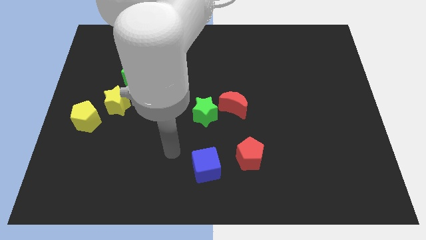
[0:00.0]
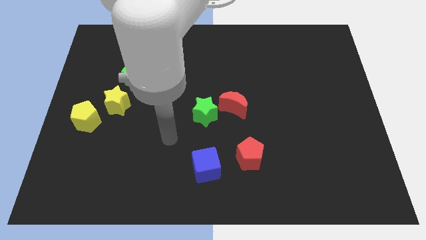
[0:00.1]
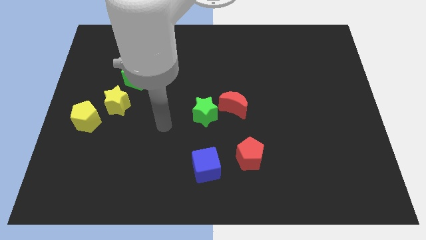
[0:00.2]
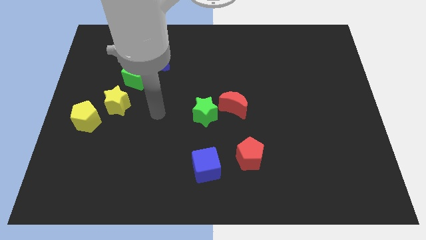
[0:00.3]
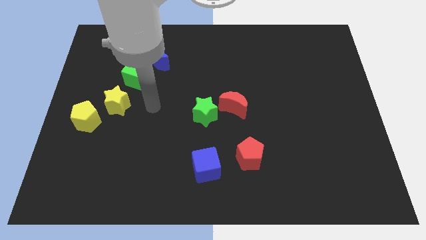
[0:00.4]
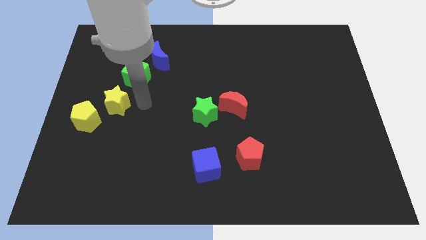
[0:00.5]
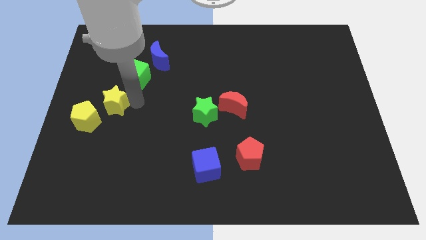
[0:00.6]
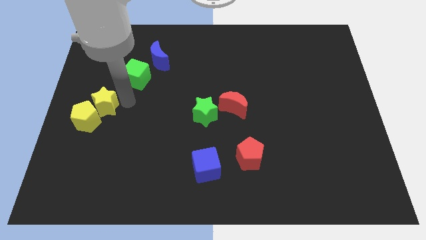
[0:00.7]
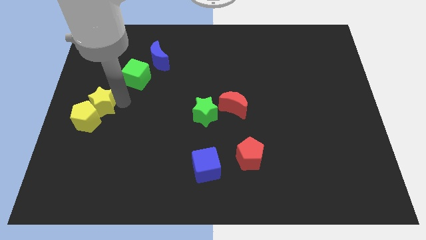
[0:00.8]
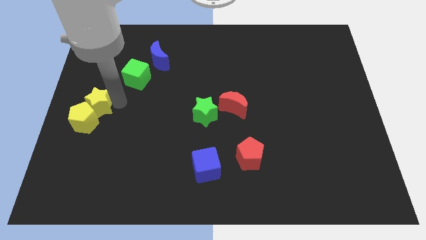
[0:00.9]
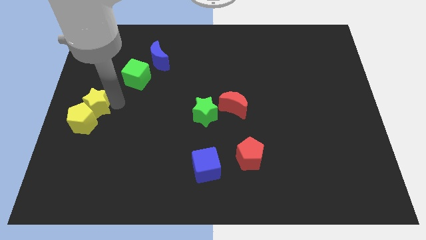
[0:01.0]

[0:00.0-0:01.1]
slide yellow star into yellow pentagon

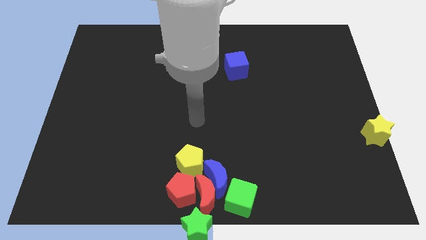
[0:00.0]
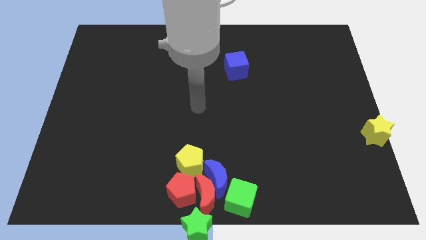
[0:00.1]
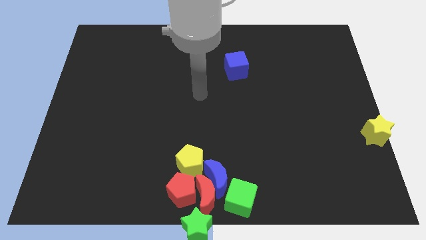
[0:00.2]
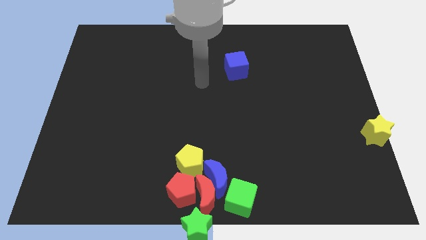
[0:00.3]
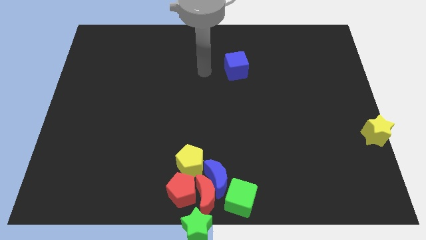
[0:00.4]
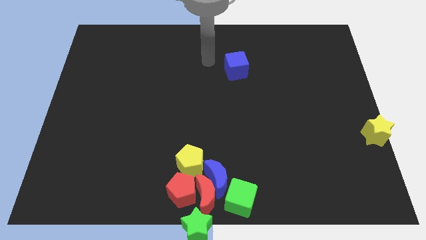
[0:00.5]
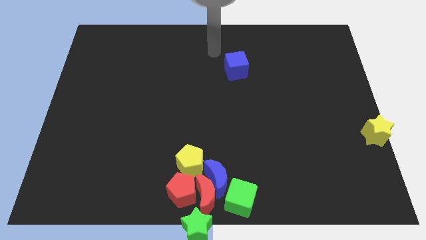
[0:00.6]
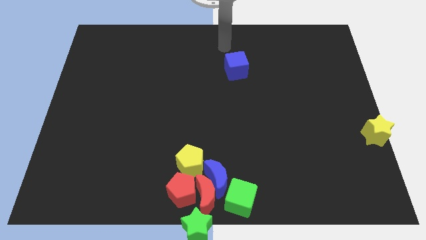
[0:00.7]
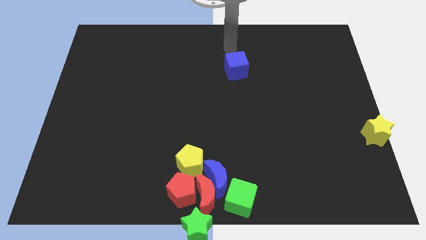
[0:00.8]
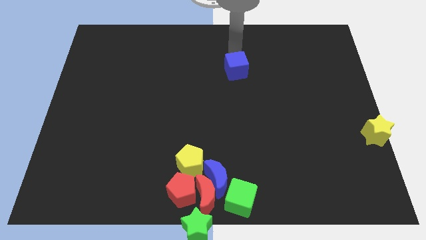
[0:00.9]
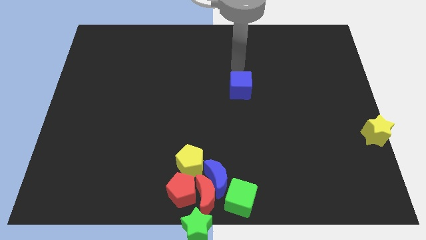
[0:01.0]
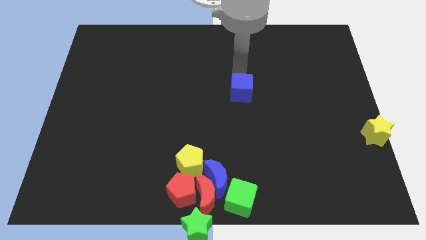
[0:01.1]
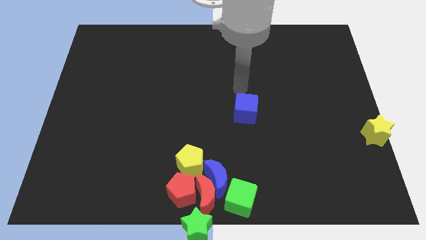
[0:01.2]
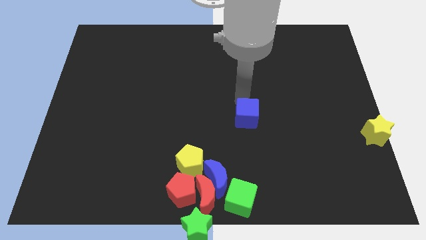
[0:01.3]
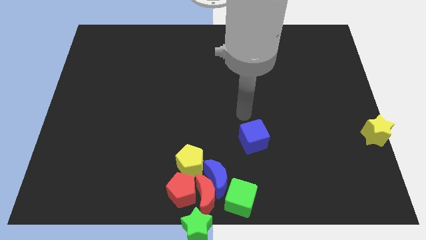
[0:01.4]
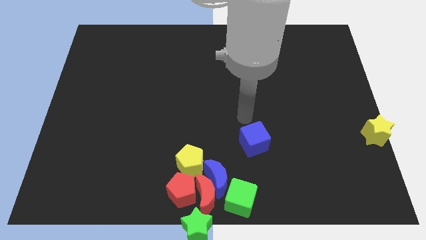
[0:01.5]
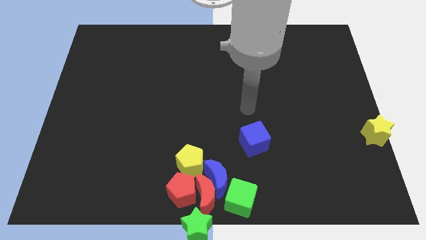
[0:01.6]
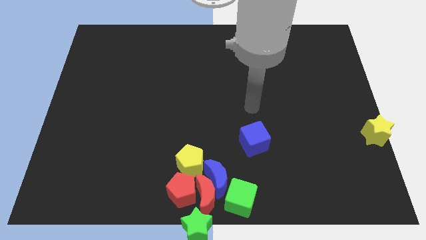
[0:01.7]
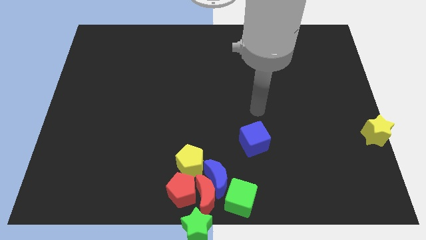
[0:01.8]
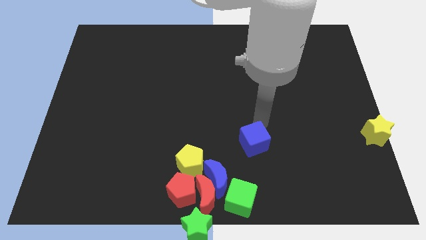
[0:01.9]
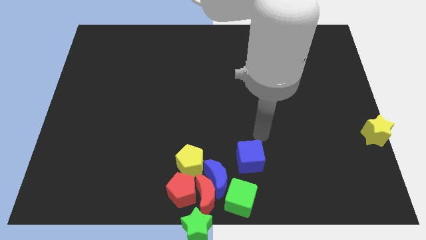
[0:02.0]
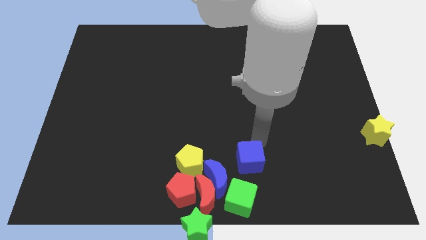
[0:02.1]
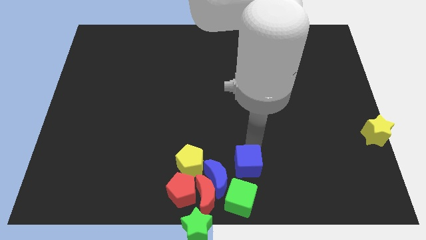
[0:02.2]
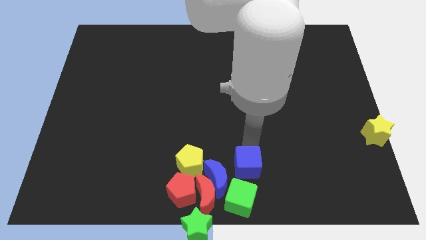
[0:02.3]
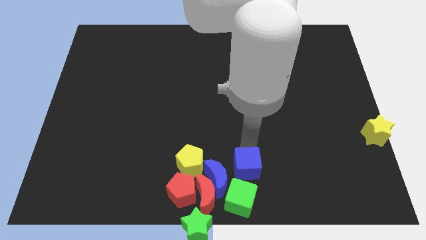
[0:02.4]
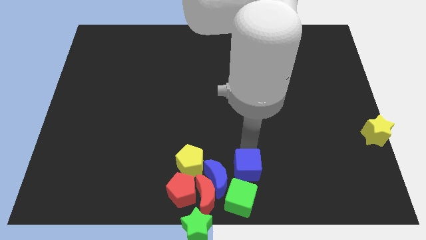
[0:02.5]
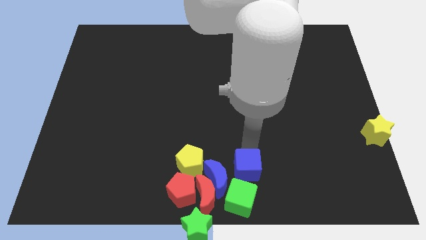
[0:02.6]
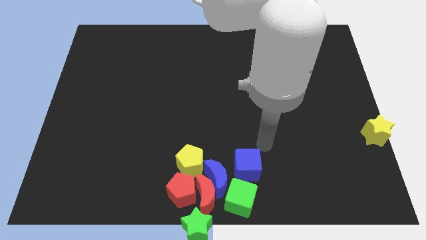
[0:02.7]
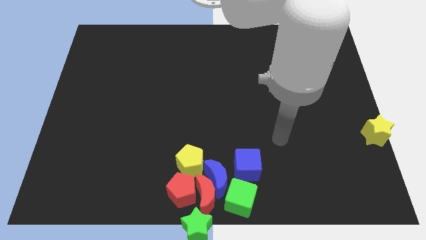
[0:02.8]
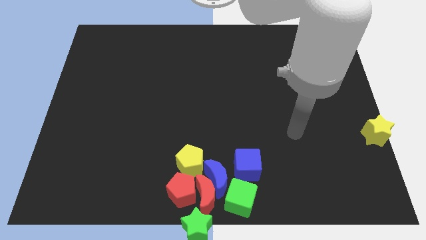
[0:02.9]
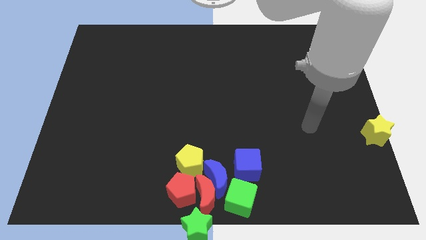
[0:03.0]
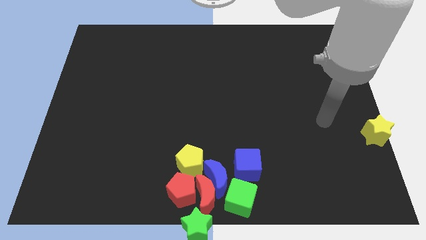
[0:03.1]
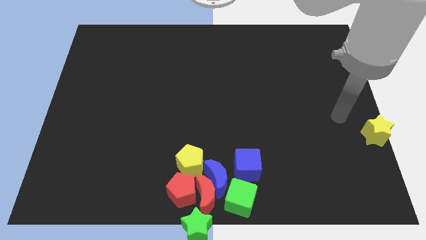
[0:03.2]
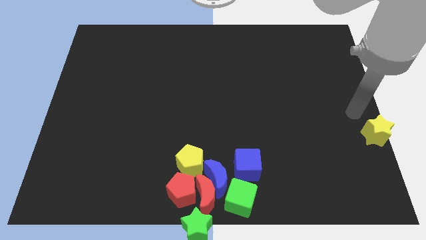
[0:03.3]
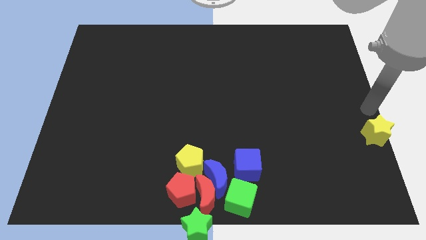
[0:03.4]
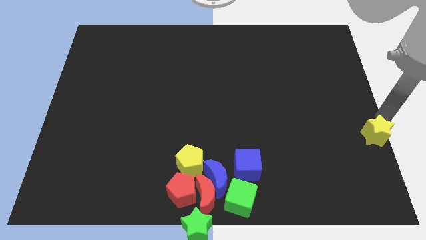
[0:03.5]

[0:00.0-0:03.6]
move blue cube above green cube

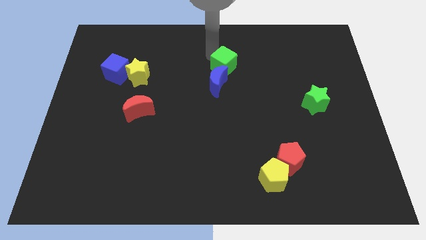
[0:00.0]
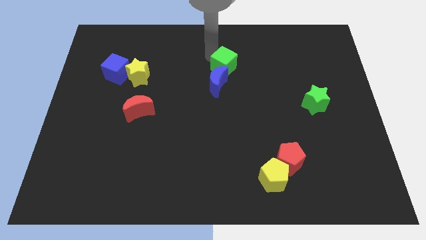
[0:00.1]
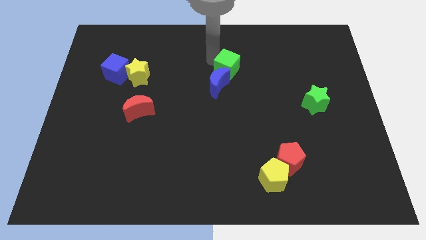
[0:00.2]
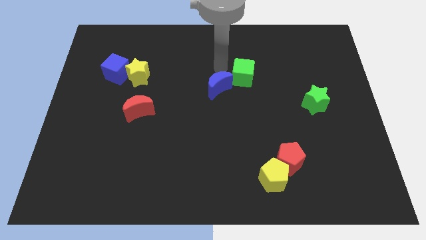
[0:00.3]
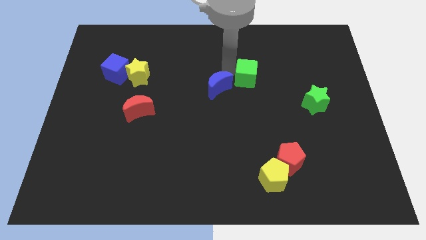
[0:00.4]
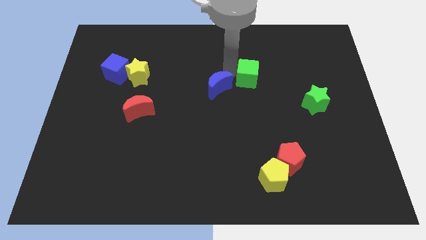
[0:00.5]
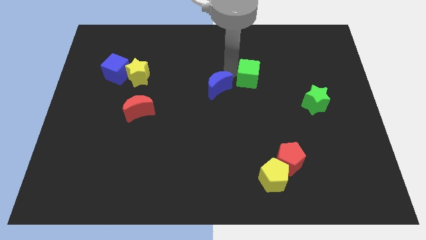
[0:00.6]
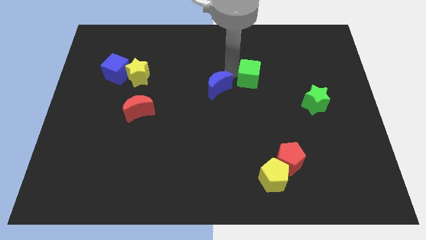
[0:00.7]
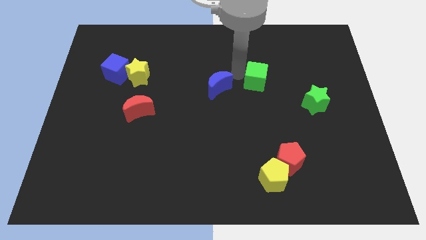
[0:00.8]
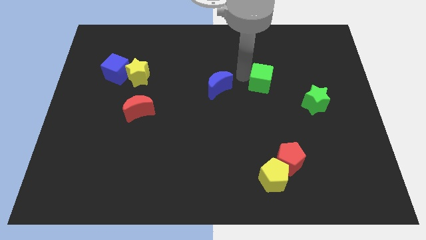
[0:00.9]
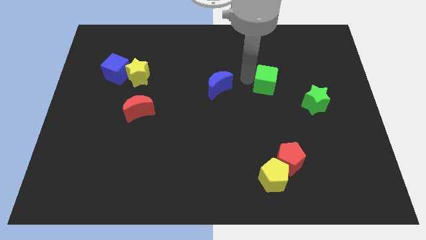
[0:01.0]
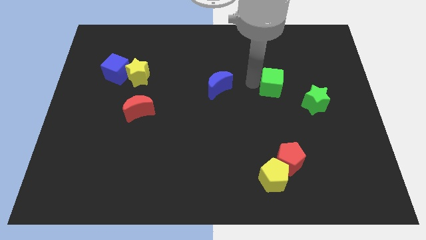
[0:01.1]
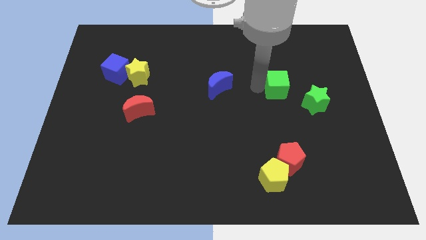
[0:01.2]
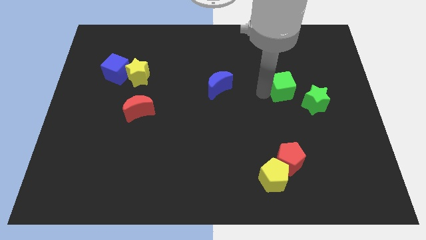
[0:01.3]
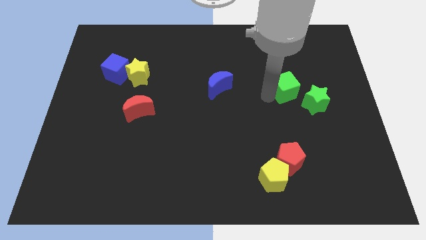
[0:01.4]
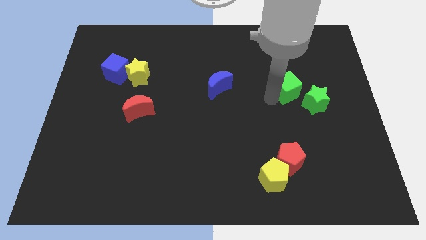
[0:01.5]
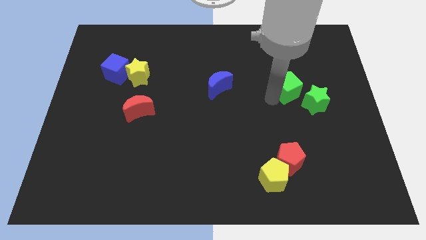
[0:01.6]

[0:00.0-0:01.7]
separate the green cube into blue crescent

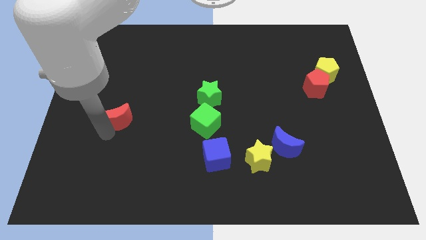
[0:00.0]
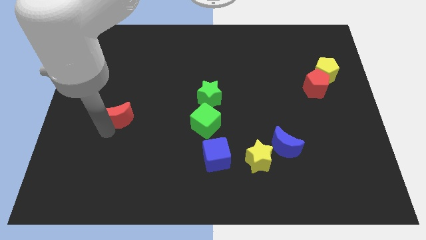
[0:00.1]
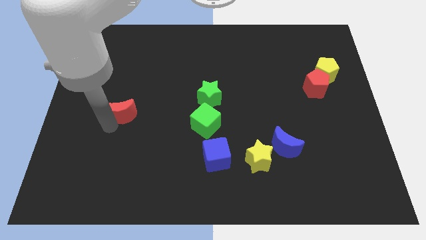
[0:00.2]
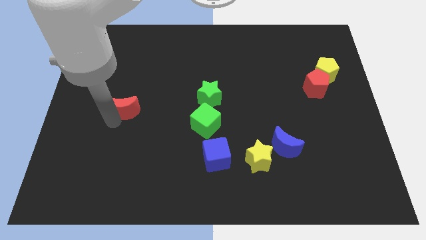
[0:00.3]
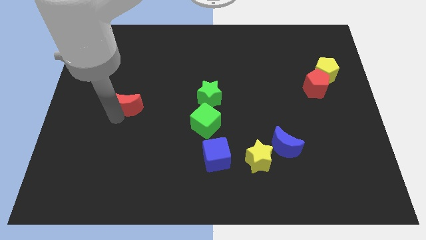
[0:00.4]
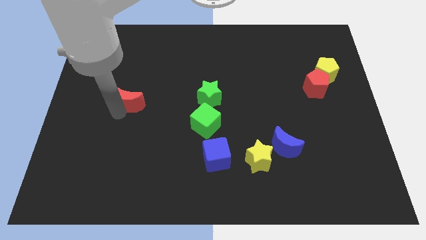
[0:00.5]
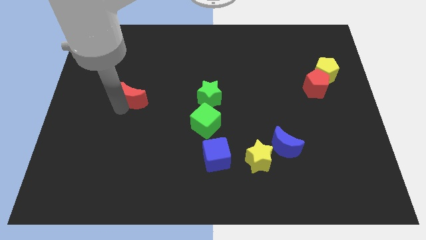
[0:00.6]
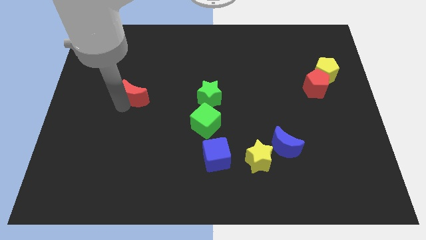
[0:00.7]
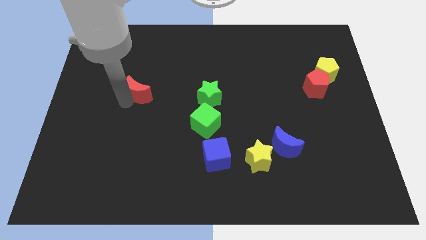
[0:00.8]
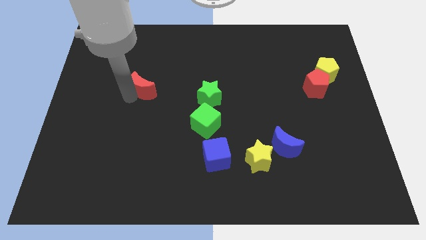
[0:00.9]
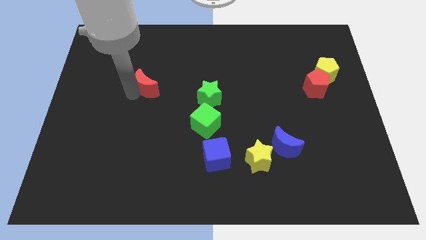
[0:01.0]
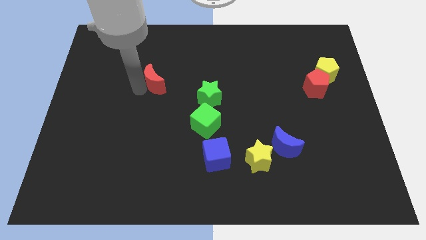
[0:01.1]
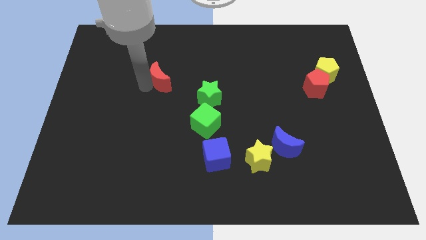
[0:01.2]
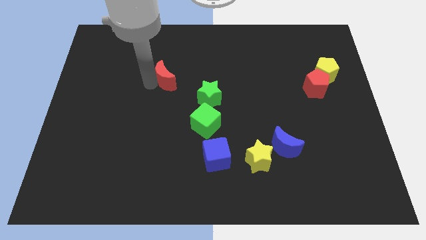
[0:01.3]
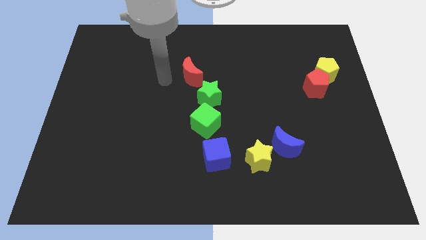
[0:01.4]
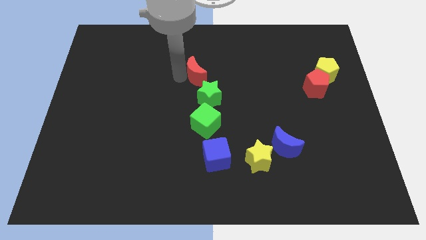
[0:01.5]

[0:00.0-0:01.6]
push the red crescent diagonally above the green star

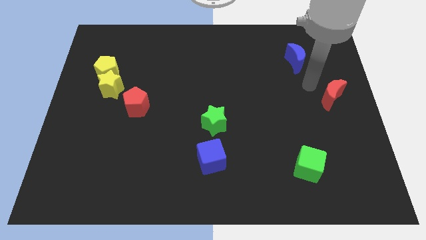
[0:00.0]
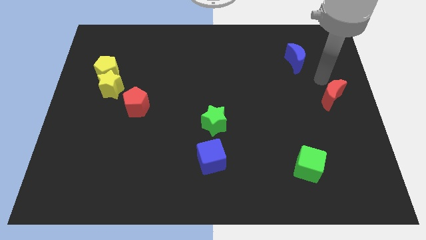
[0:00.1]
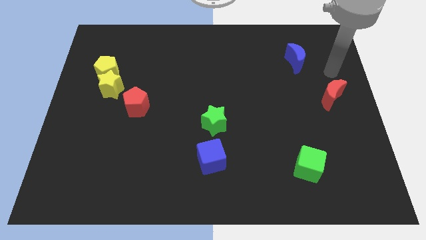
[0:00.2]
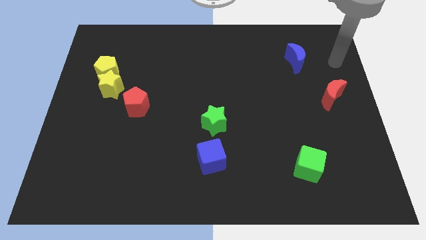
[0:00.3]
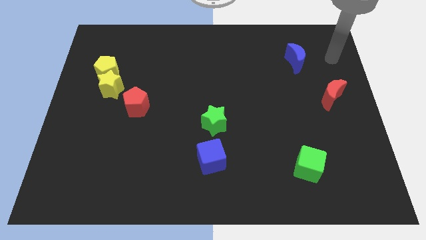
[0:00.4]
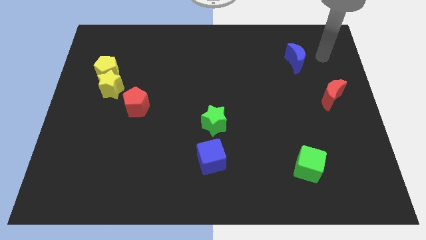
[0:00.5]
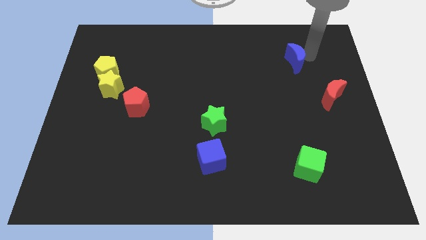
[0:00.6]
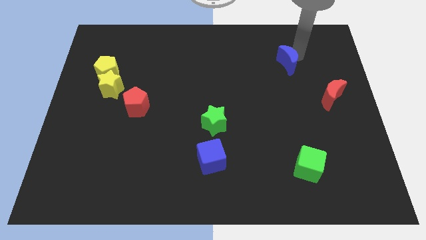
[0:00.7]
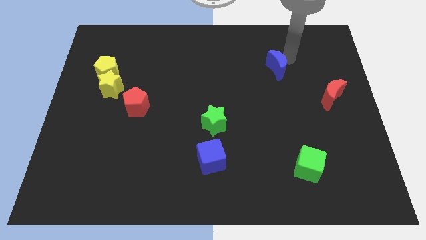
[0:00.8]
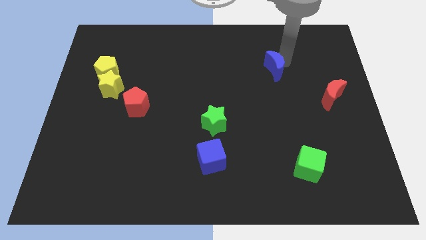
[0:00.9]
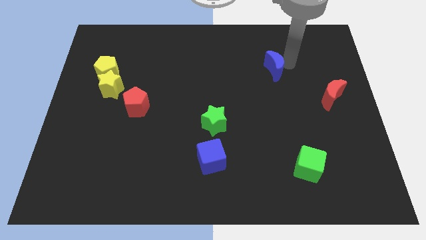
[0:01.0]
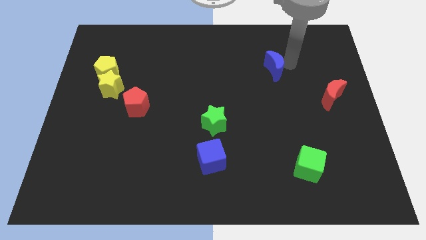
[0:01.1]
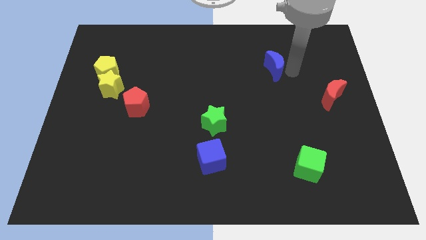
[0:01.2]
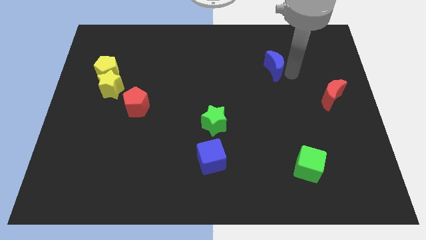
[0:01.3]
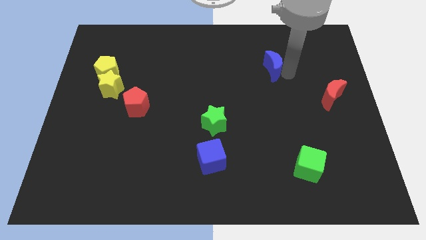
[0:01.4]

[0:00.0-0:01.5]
push the blue moon towards the center
